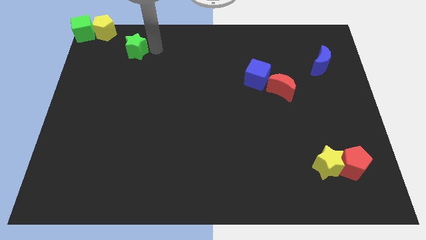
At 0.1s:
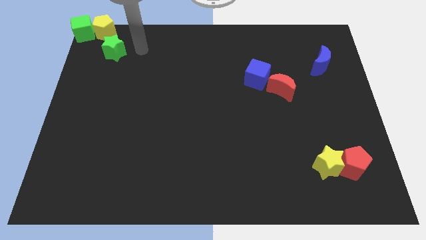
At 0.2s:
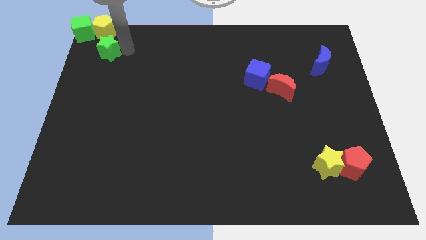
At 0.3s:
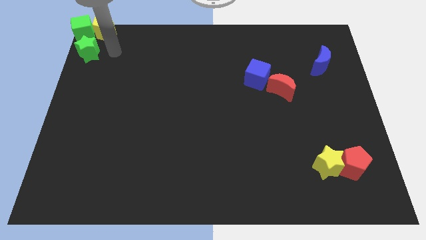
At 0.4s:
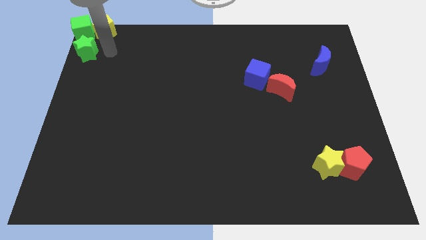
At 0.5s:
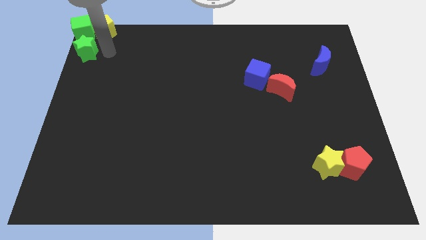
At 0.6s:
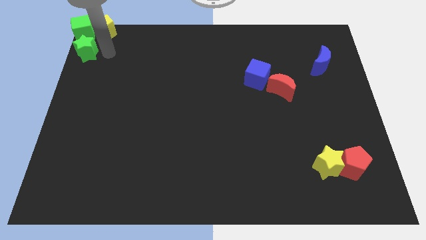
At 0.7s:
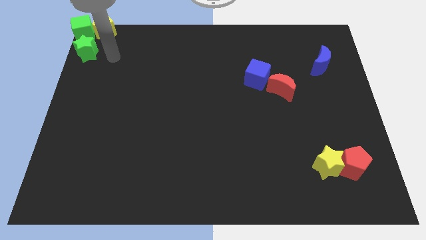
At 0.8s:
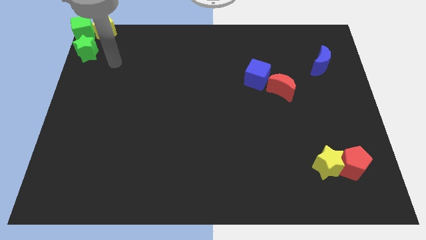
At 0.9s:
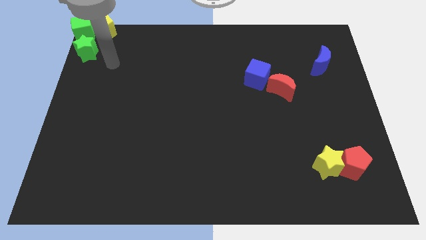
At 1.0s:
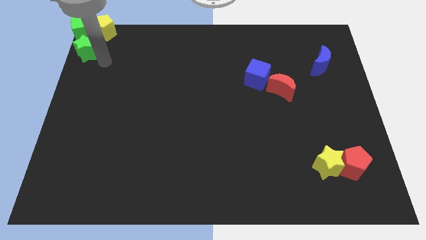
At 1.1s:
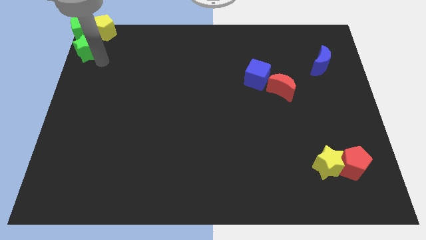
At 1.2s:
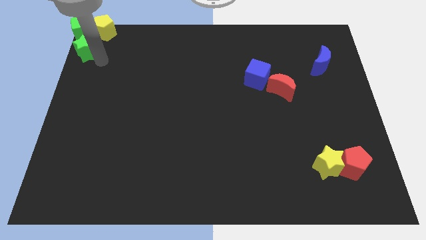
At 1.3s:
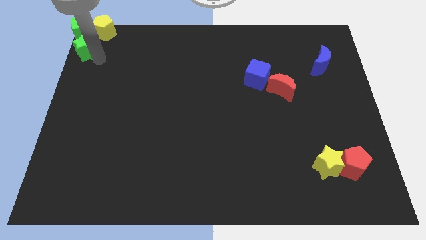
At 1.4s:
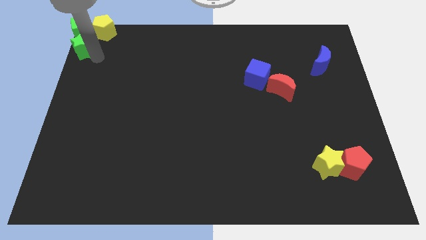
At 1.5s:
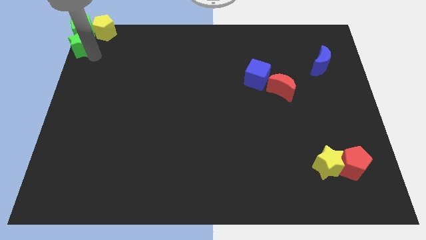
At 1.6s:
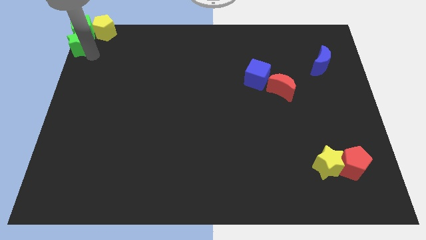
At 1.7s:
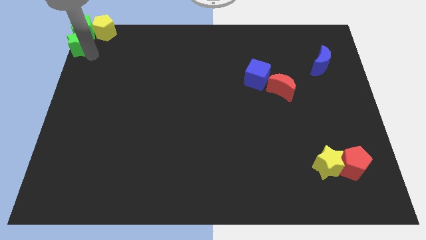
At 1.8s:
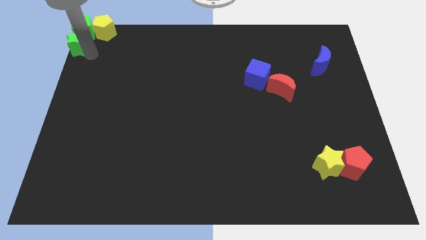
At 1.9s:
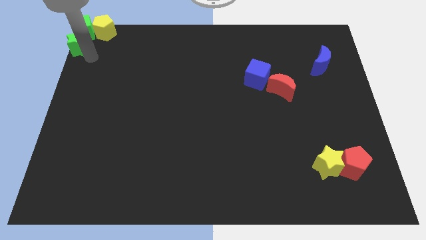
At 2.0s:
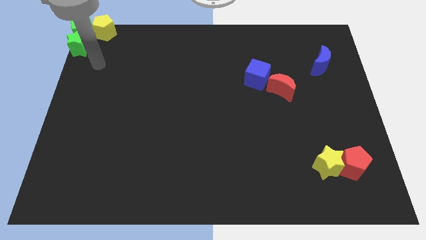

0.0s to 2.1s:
place the green star to the top left of the board

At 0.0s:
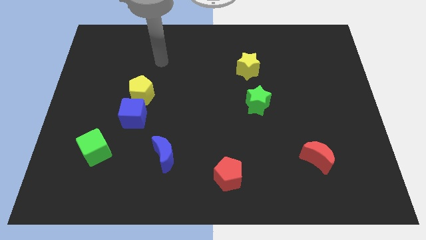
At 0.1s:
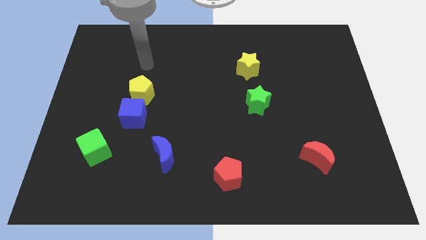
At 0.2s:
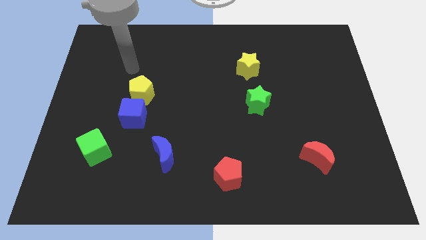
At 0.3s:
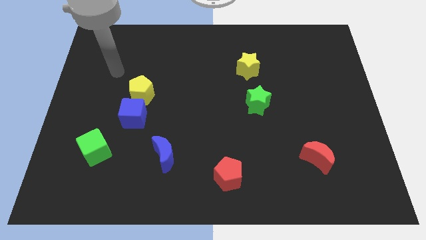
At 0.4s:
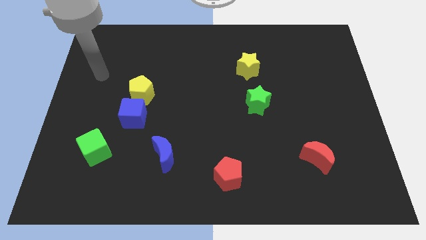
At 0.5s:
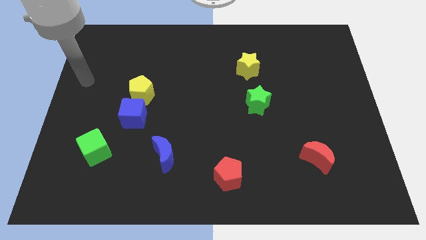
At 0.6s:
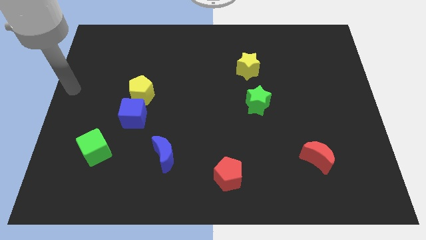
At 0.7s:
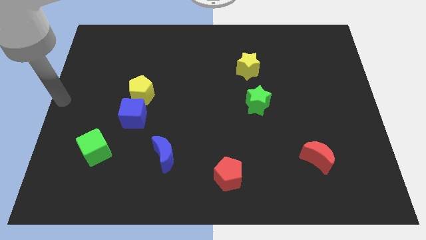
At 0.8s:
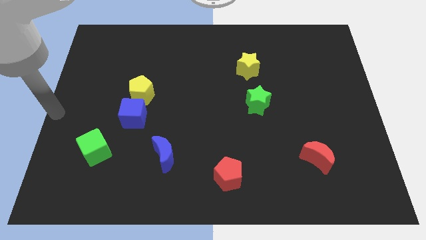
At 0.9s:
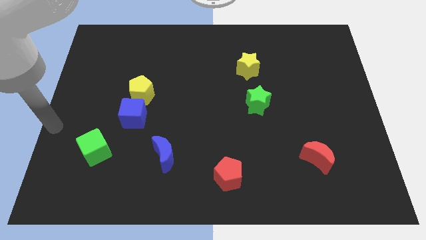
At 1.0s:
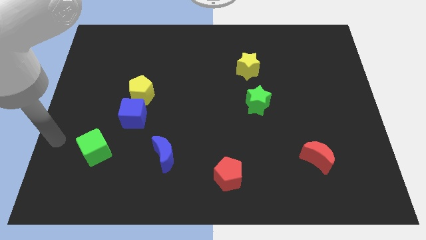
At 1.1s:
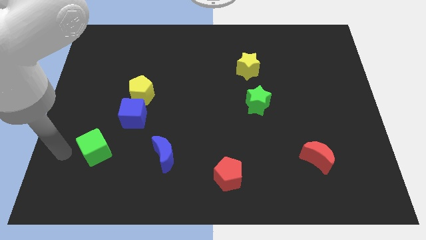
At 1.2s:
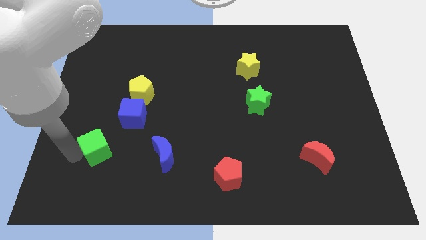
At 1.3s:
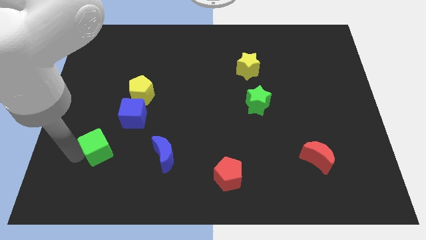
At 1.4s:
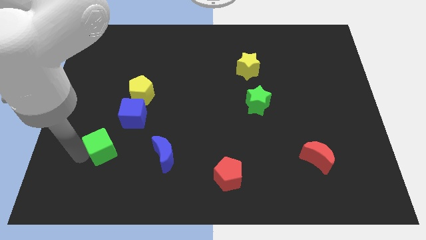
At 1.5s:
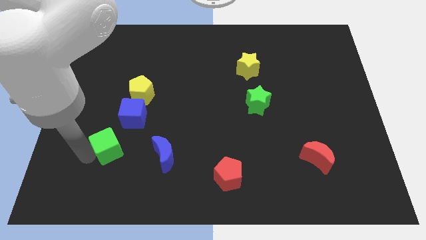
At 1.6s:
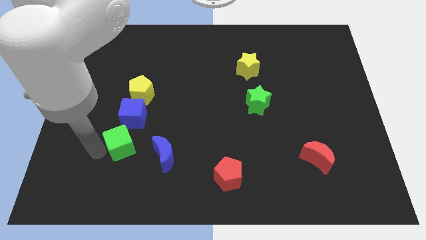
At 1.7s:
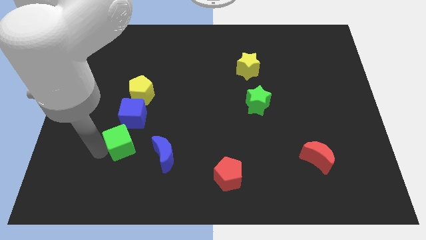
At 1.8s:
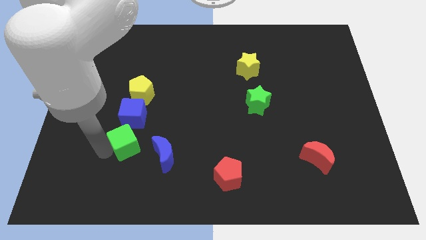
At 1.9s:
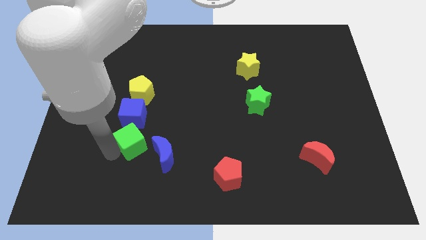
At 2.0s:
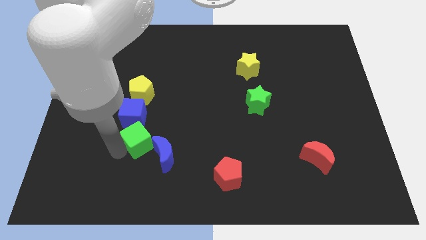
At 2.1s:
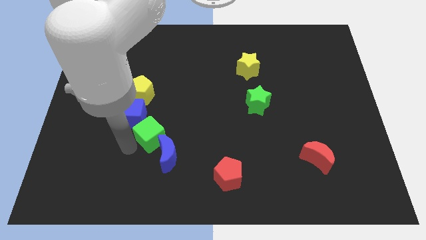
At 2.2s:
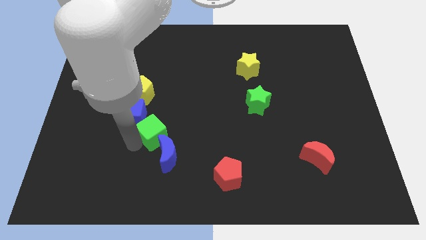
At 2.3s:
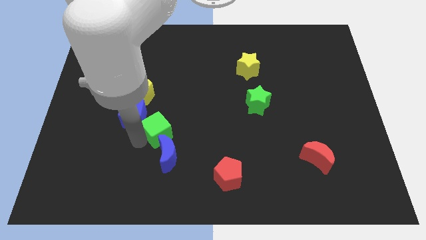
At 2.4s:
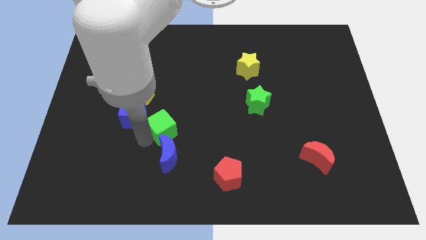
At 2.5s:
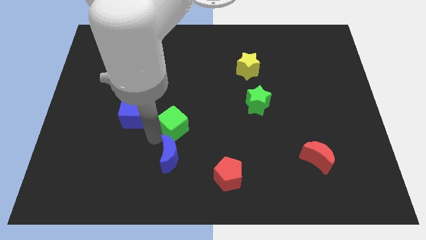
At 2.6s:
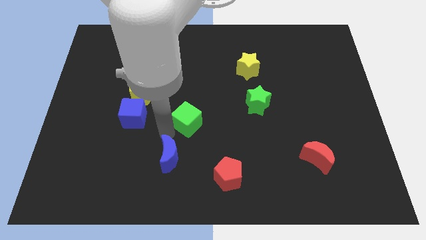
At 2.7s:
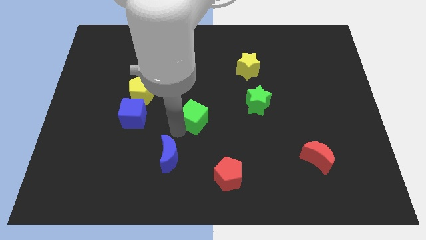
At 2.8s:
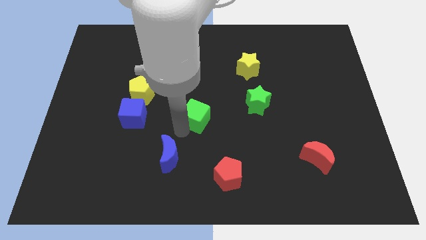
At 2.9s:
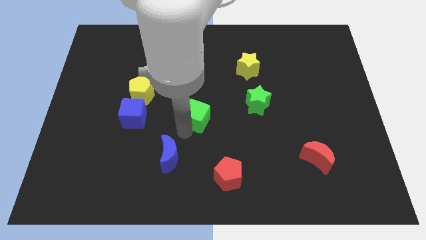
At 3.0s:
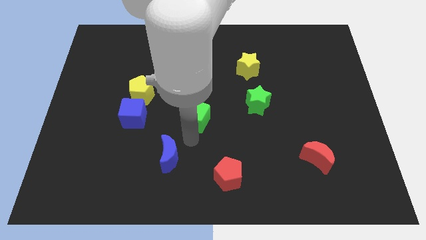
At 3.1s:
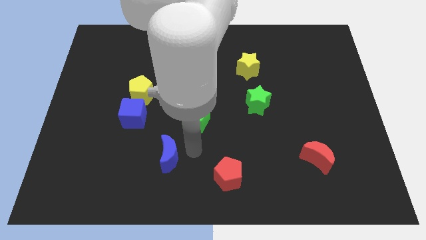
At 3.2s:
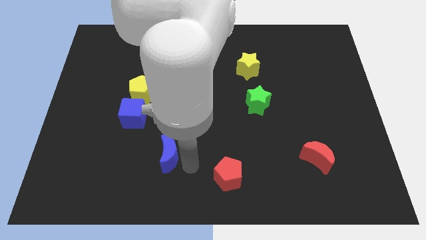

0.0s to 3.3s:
move the green cube to the centre of the board

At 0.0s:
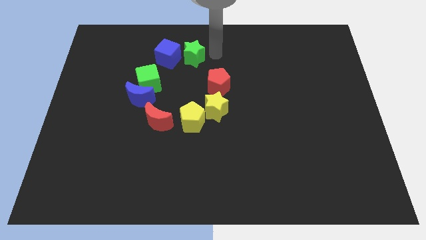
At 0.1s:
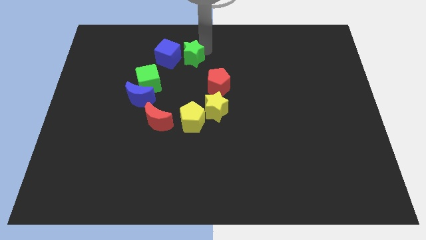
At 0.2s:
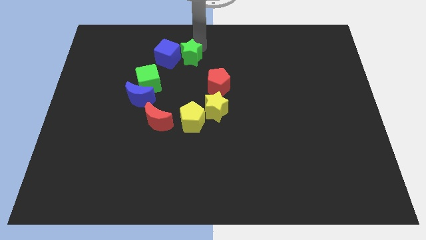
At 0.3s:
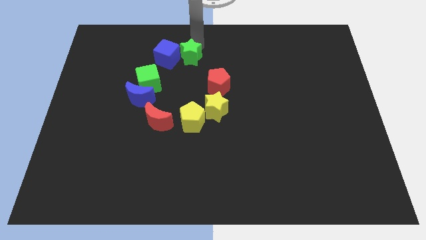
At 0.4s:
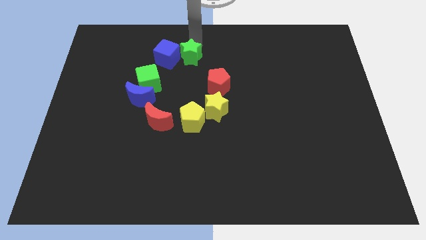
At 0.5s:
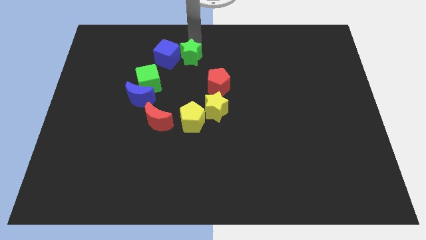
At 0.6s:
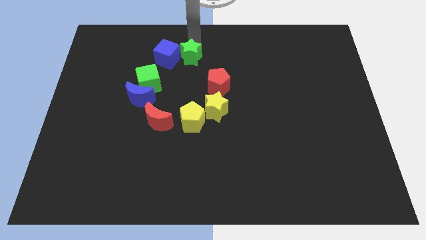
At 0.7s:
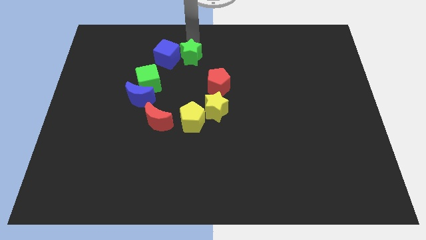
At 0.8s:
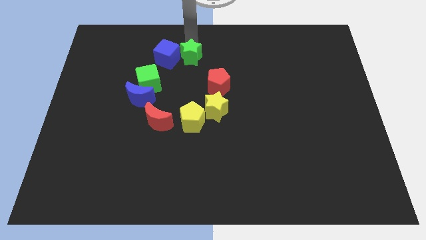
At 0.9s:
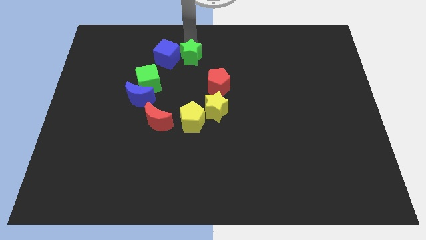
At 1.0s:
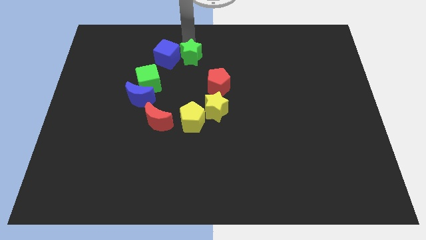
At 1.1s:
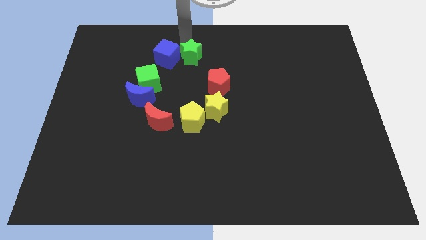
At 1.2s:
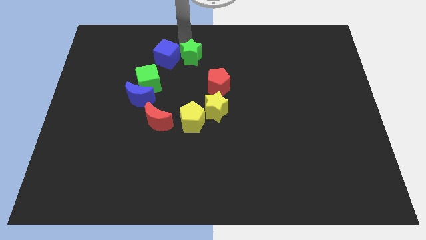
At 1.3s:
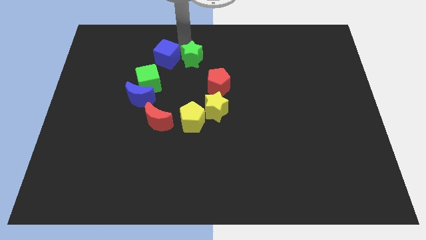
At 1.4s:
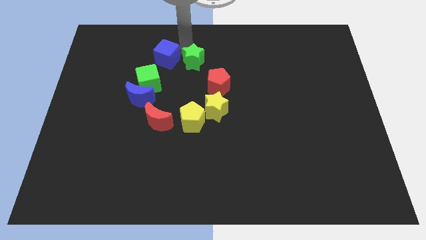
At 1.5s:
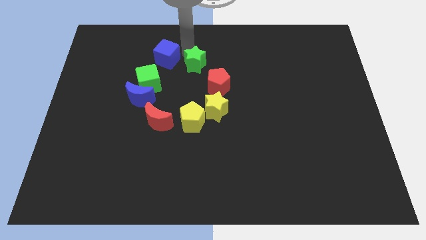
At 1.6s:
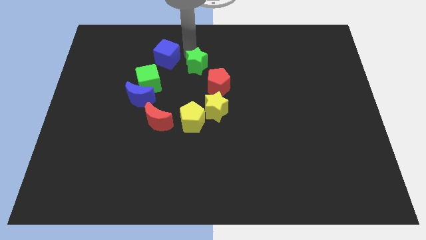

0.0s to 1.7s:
place the green star beside the red pentagon to form a circle shape

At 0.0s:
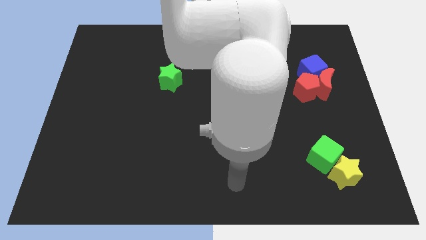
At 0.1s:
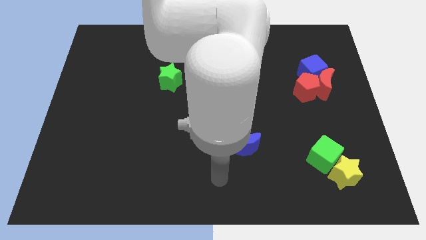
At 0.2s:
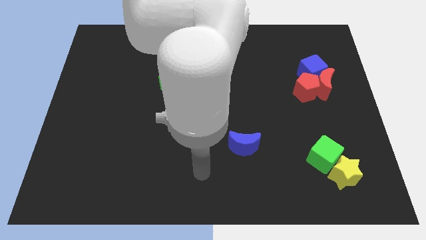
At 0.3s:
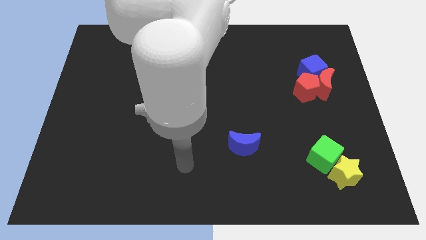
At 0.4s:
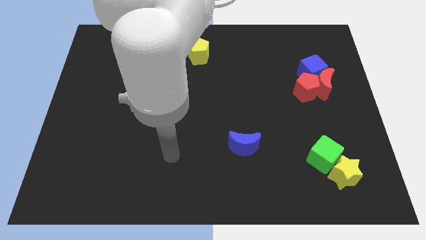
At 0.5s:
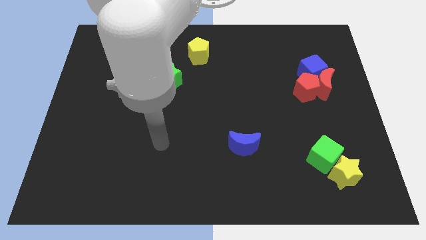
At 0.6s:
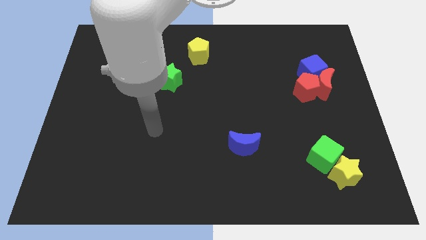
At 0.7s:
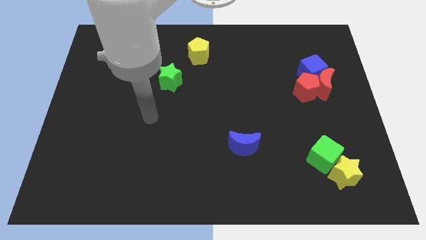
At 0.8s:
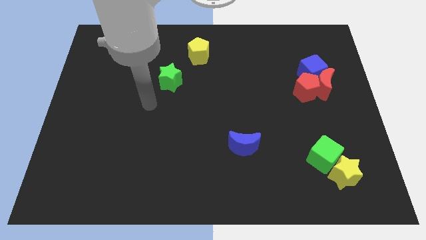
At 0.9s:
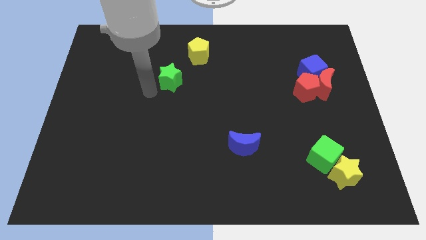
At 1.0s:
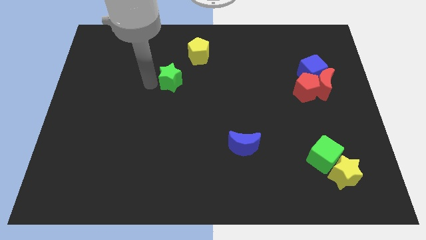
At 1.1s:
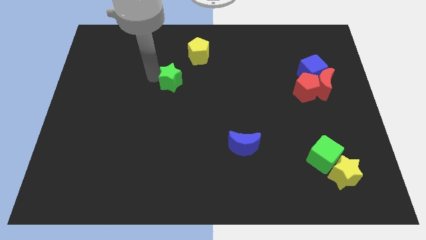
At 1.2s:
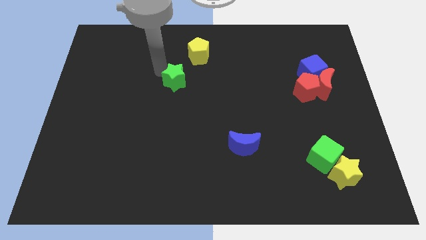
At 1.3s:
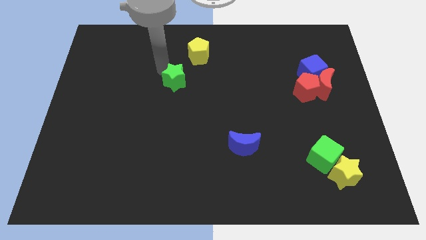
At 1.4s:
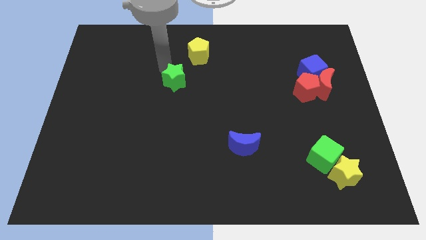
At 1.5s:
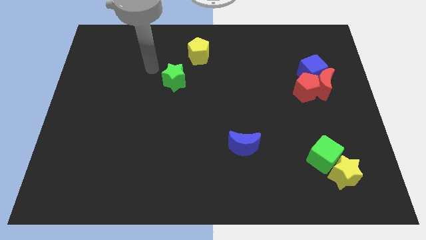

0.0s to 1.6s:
touch the green star

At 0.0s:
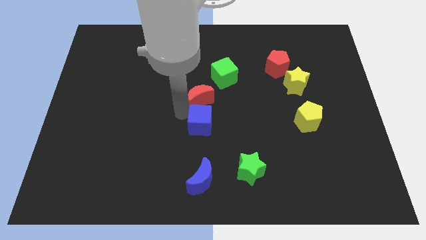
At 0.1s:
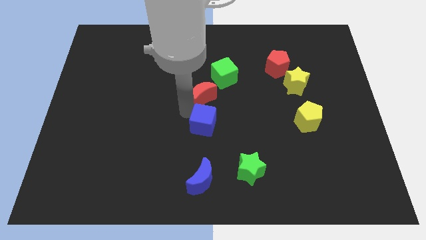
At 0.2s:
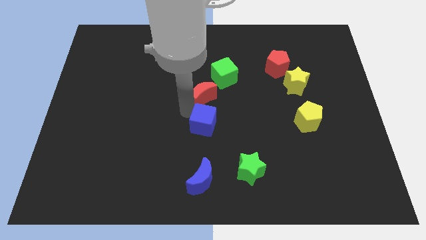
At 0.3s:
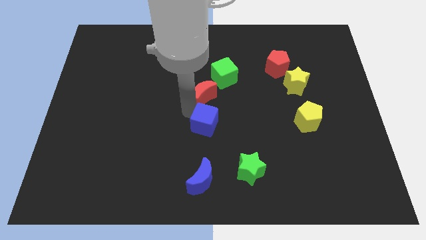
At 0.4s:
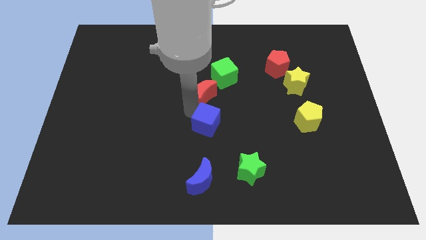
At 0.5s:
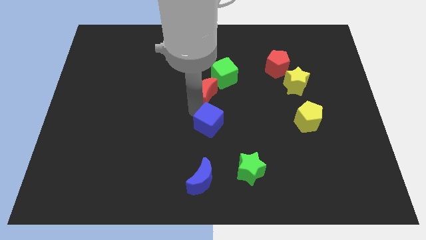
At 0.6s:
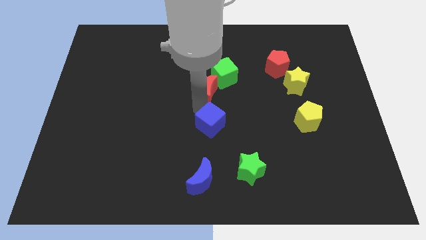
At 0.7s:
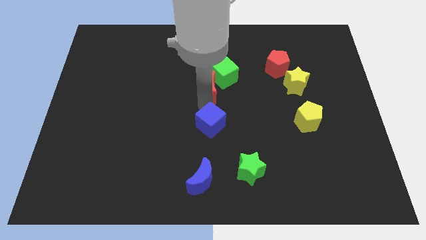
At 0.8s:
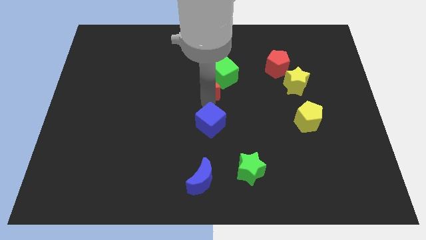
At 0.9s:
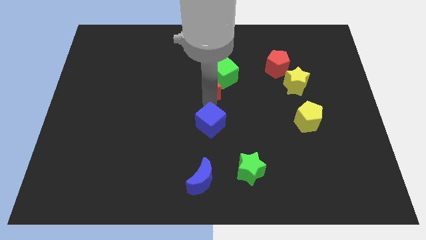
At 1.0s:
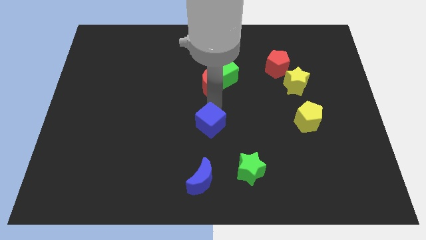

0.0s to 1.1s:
separate the red crescent and the blue cube
